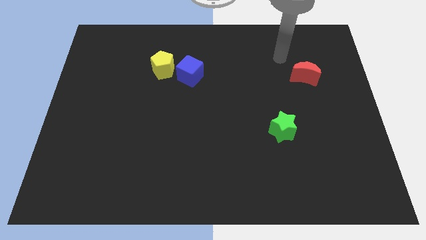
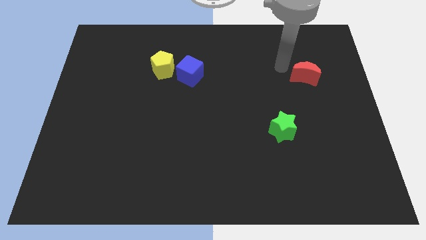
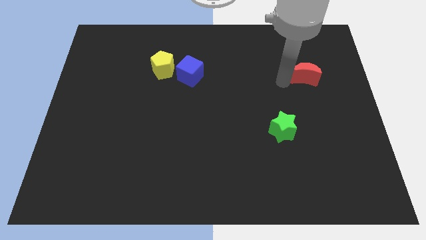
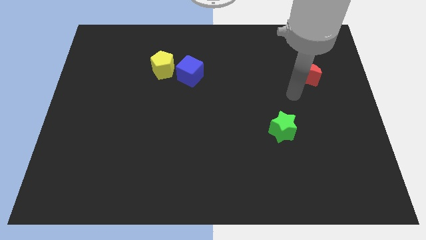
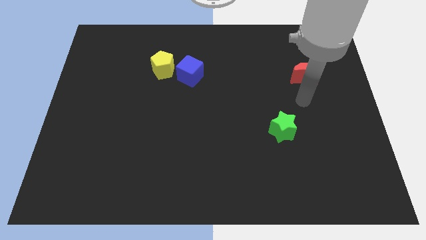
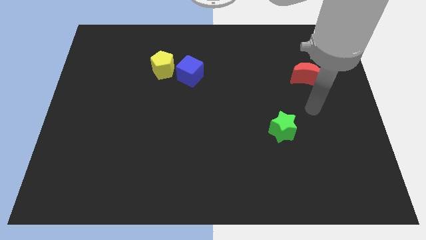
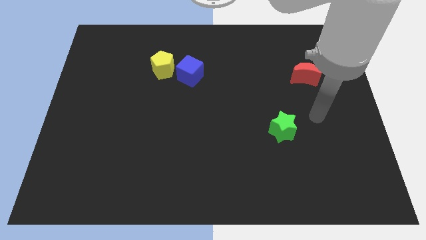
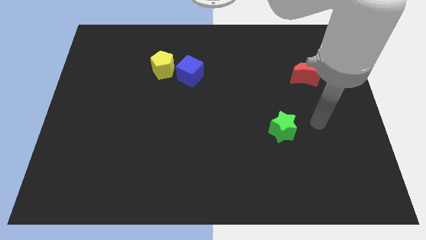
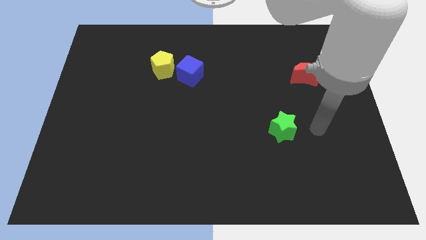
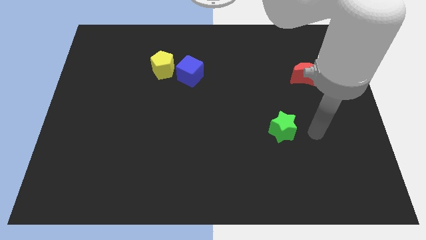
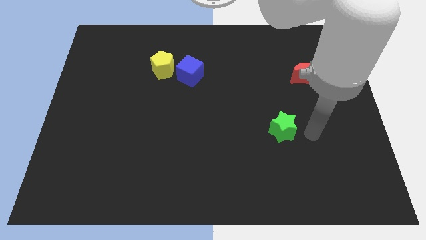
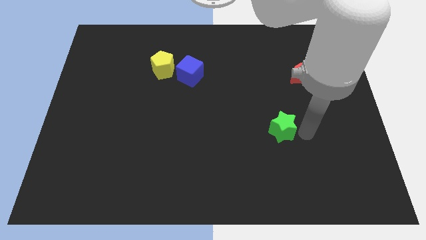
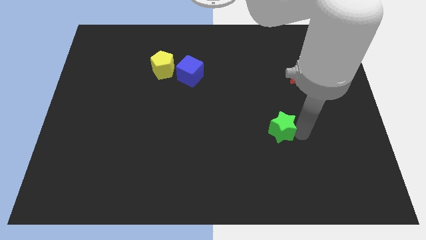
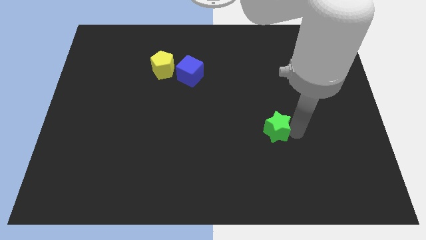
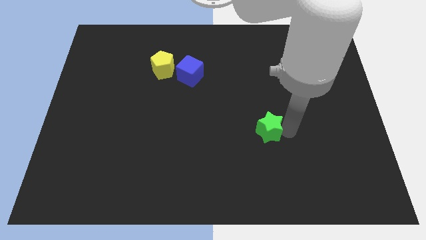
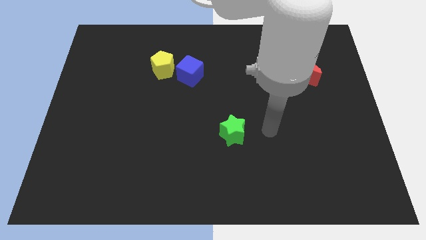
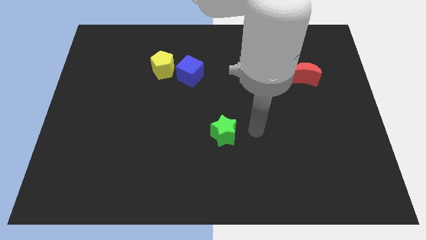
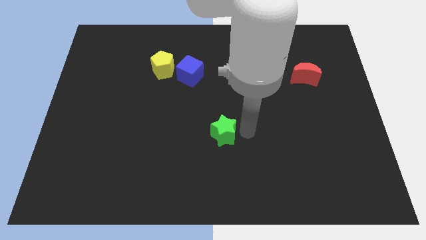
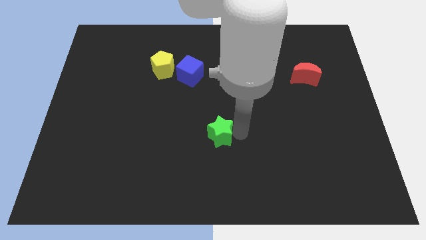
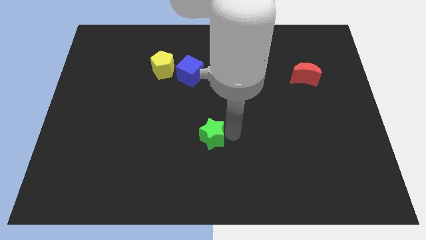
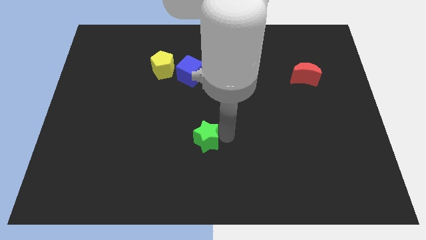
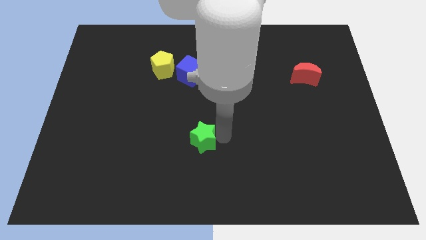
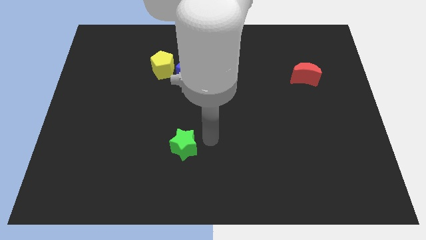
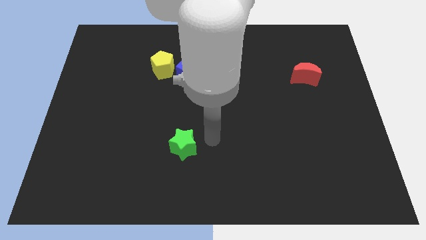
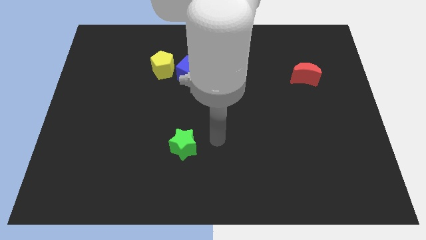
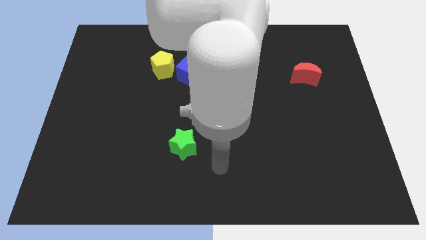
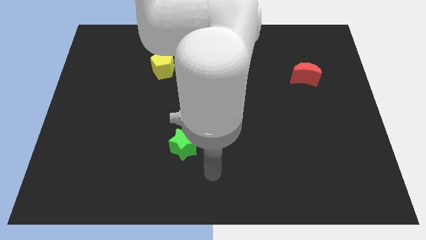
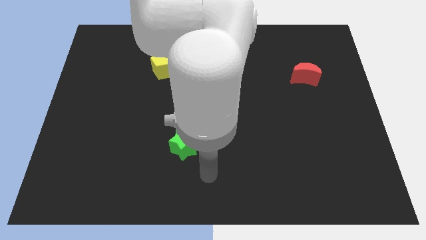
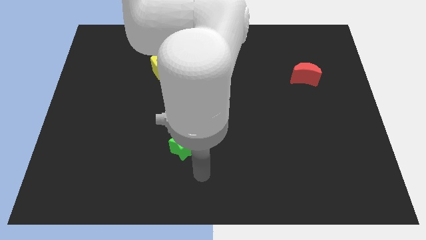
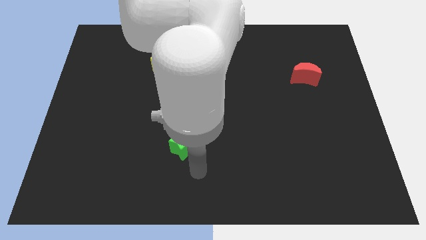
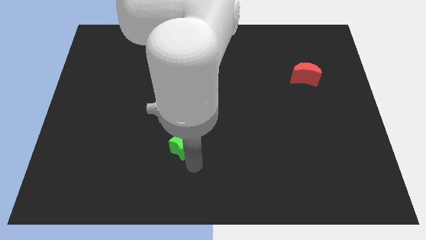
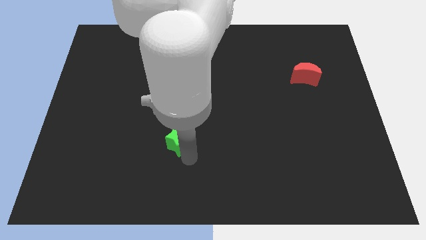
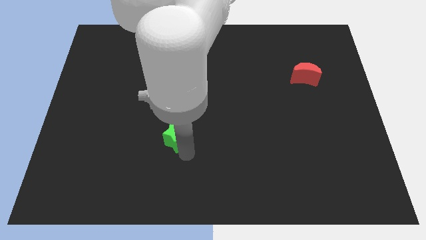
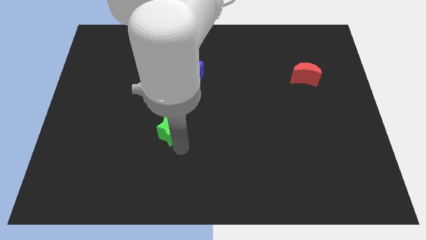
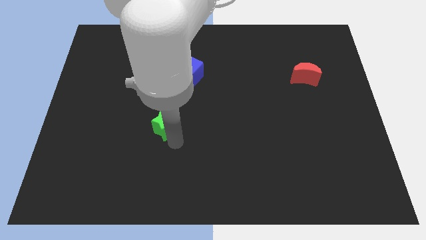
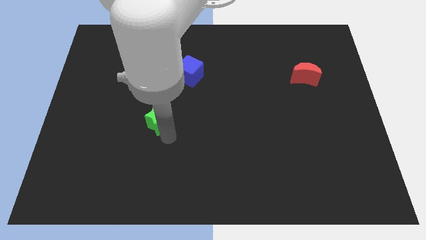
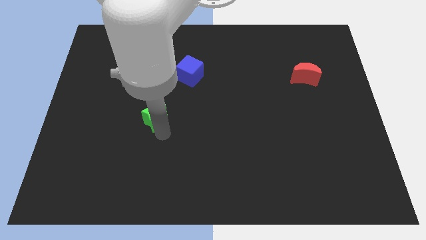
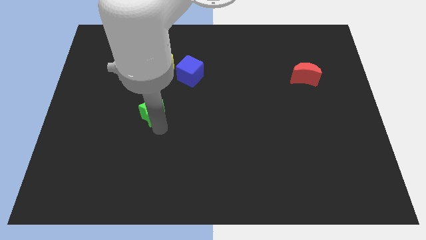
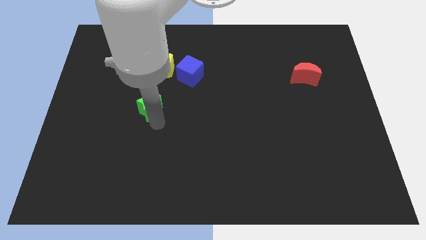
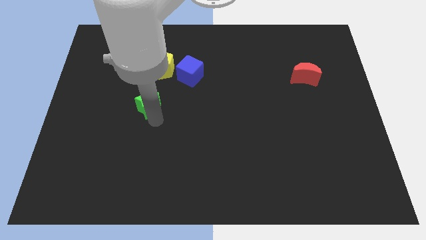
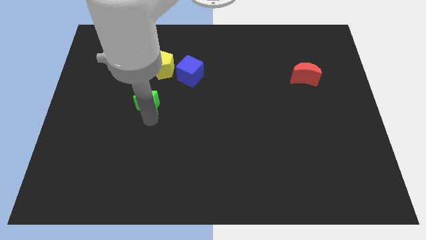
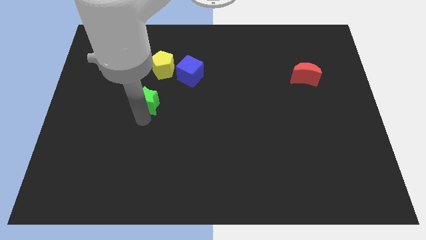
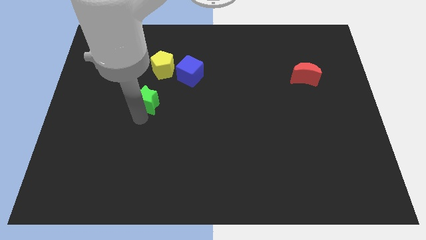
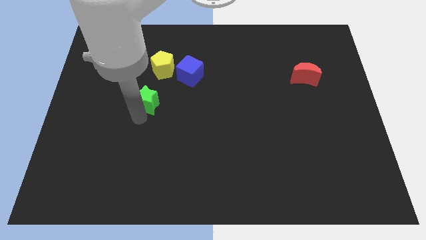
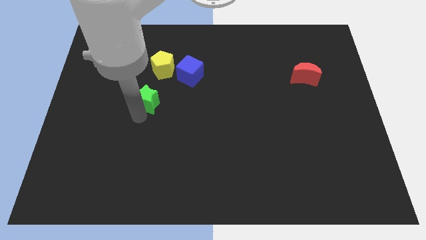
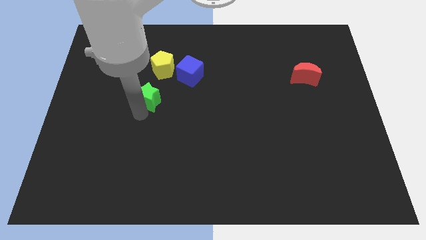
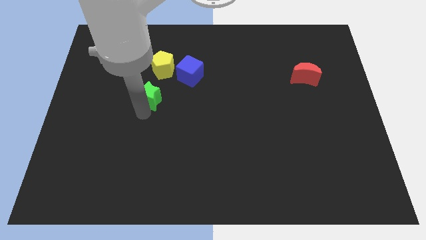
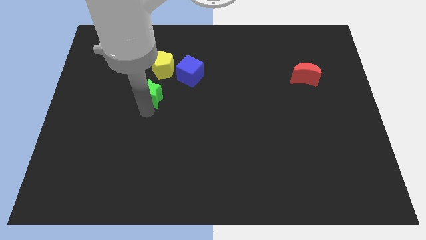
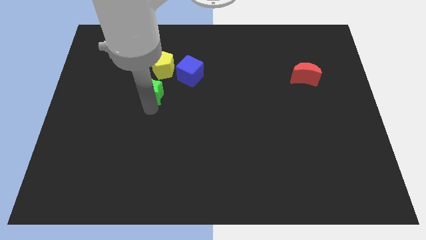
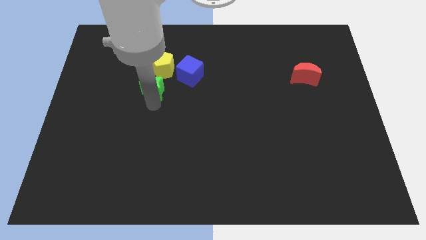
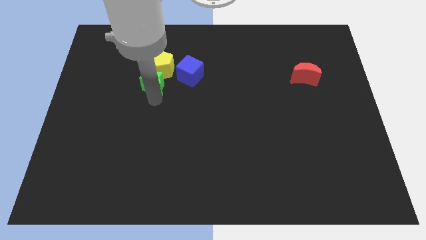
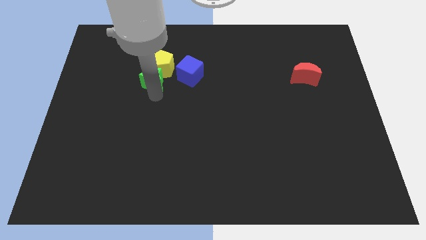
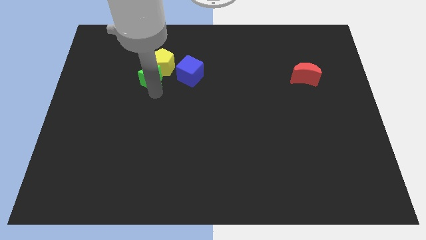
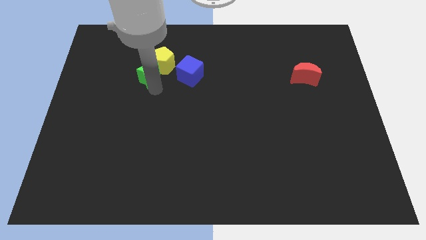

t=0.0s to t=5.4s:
move the star to the yellow pentagon

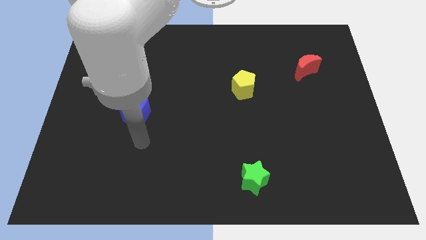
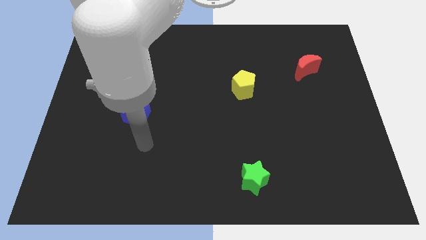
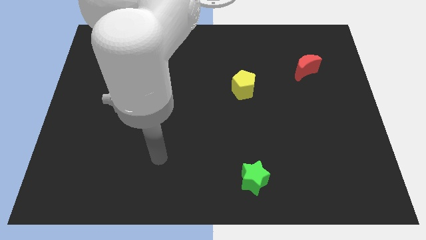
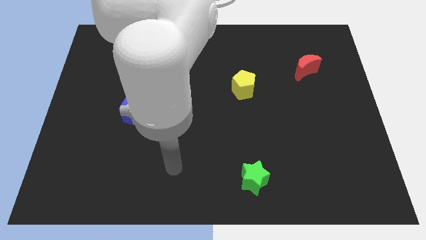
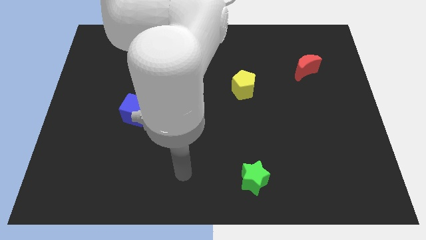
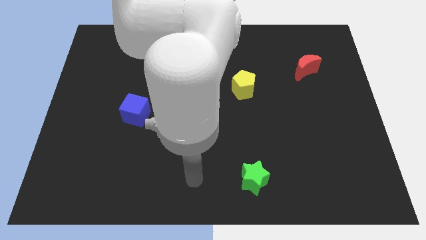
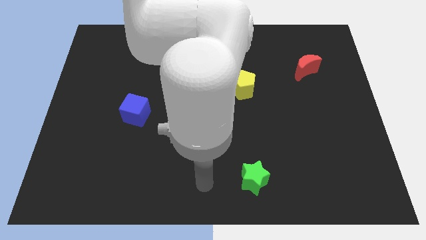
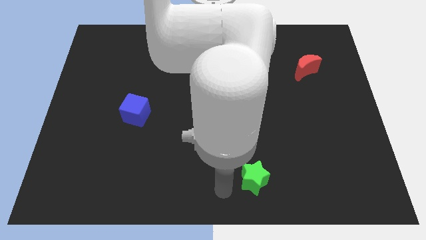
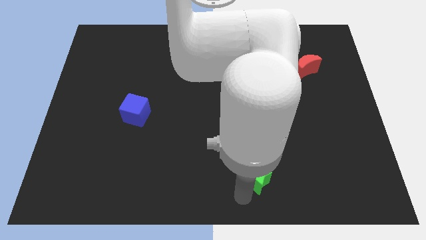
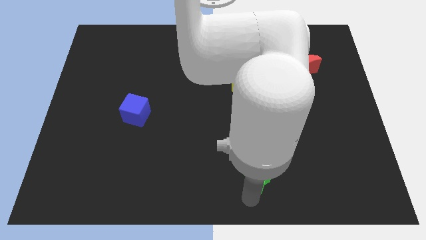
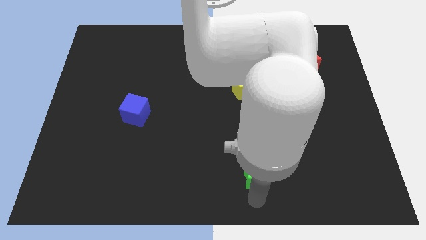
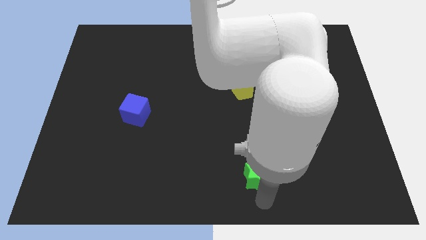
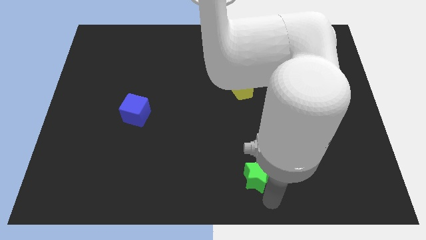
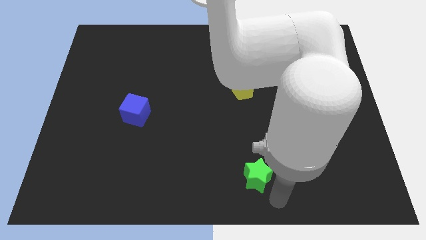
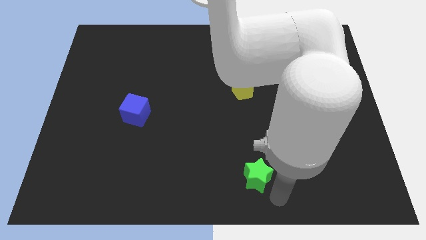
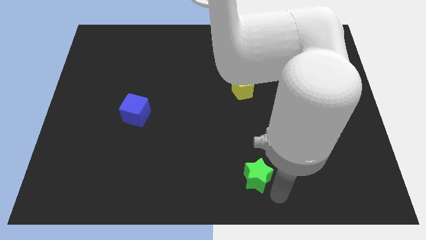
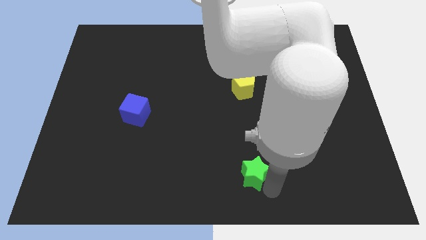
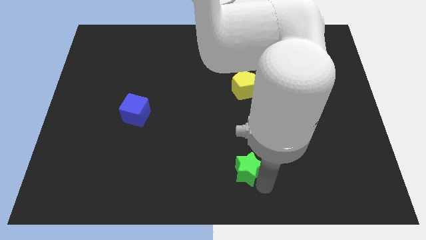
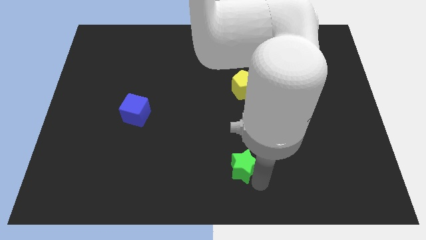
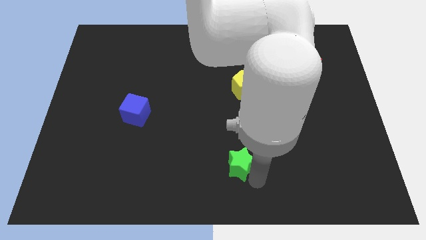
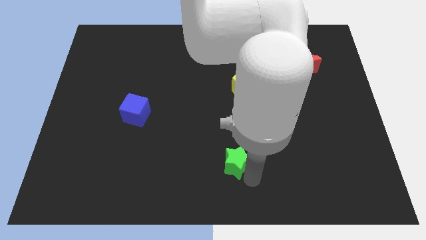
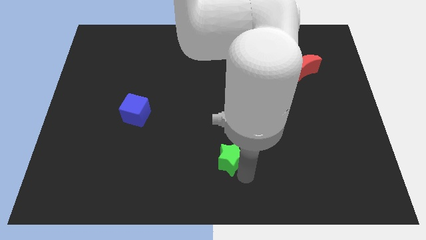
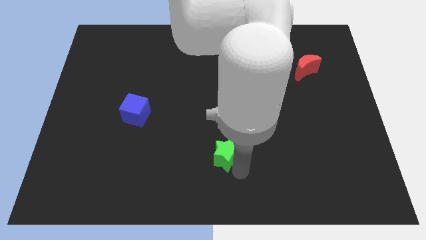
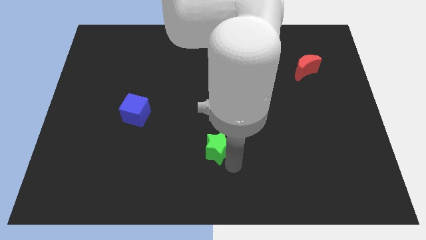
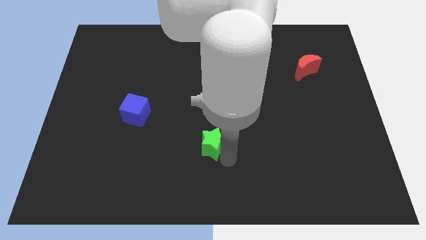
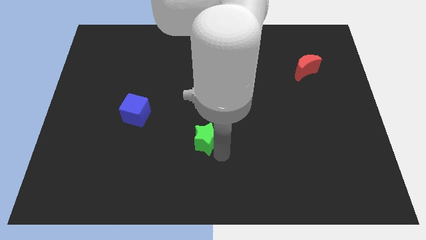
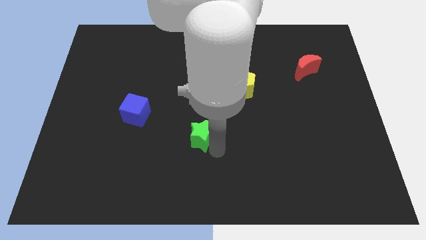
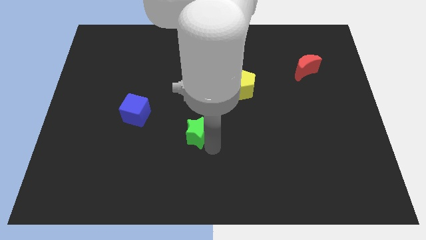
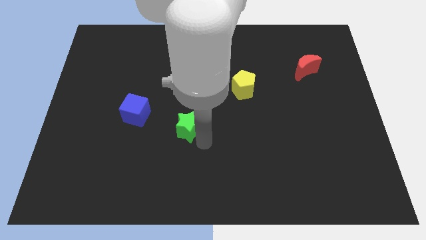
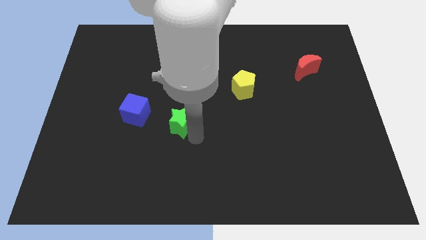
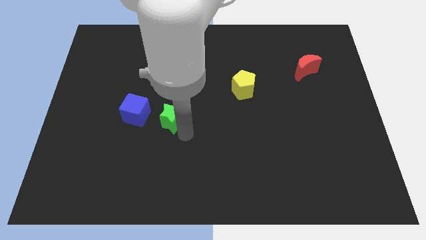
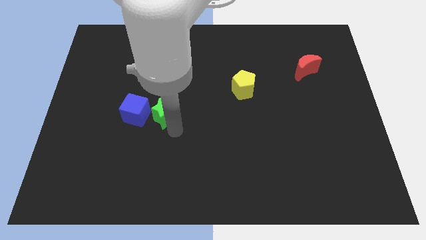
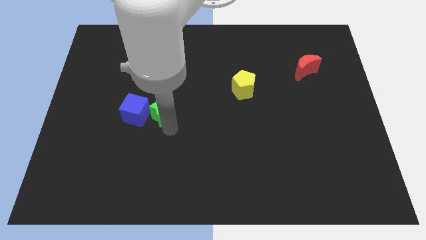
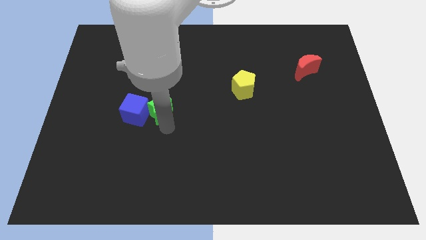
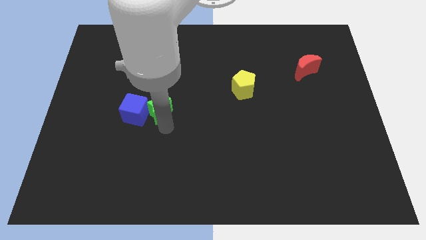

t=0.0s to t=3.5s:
put the green star next to the blue block

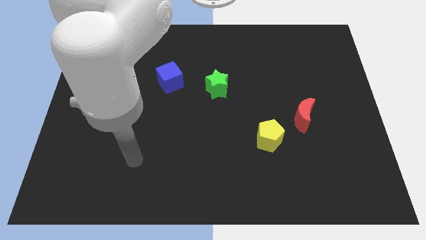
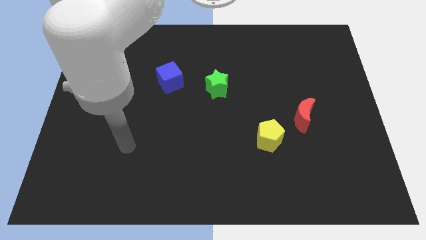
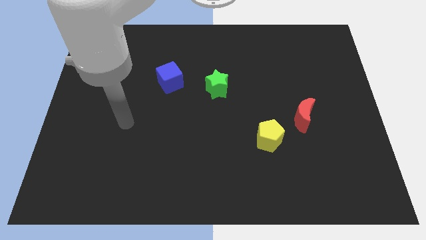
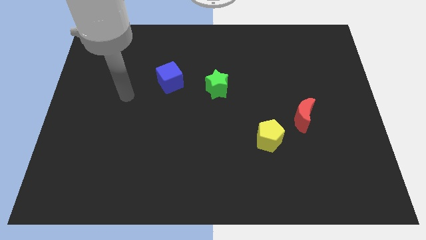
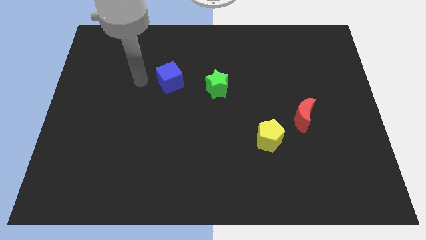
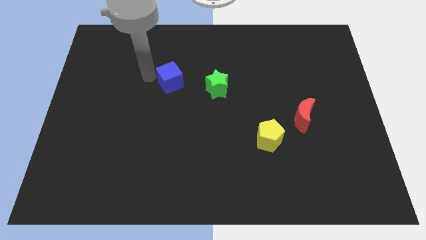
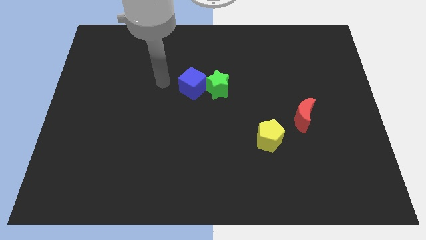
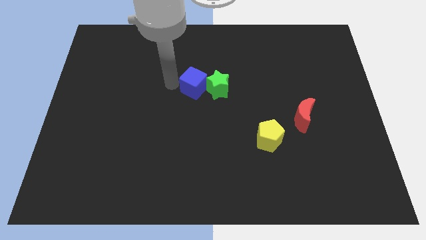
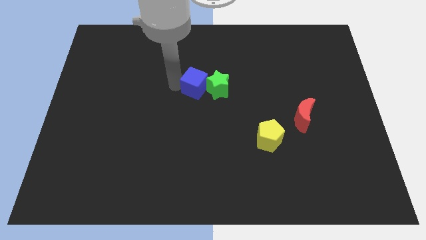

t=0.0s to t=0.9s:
move the blue cube next to the green star
